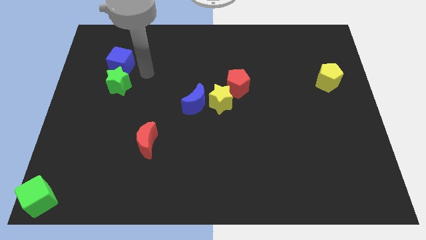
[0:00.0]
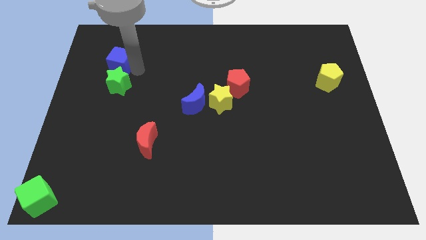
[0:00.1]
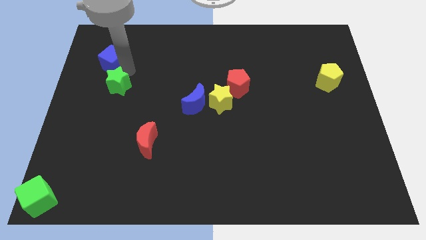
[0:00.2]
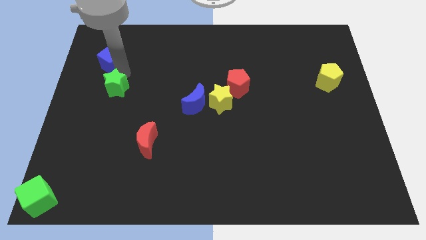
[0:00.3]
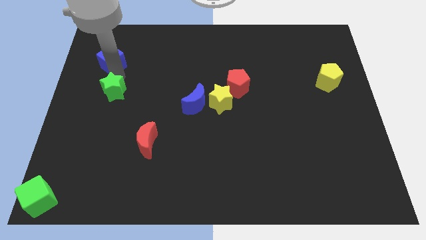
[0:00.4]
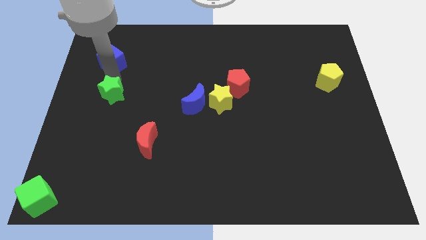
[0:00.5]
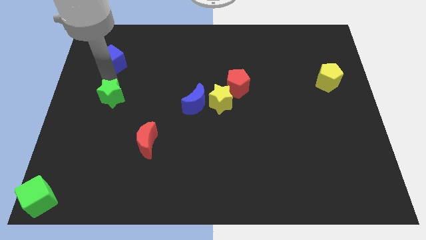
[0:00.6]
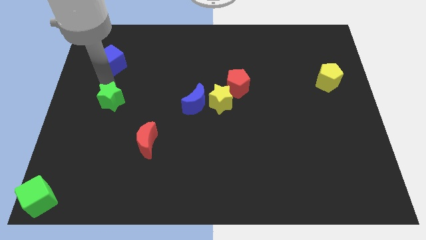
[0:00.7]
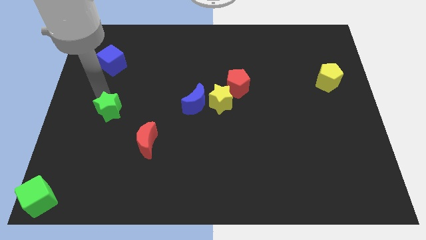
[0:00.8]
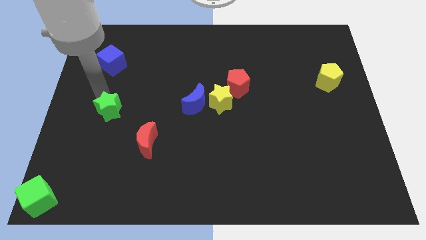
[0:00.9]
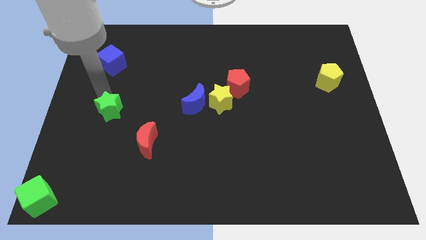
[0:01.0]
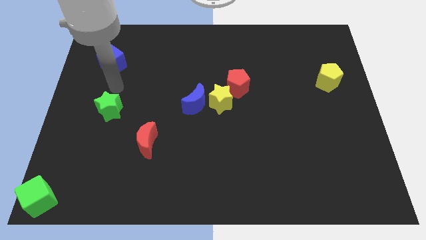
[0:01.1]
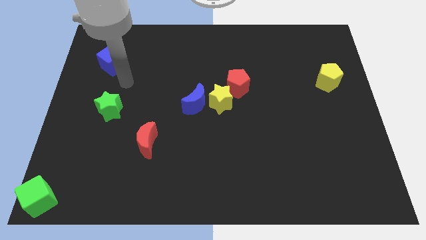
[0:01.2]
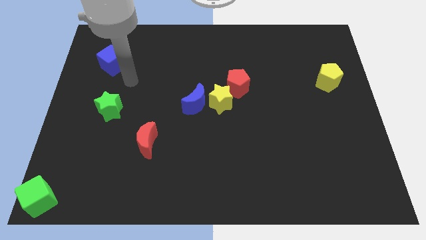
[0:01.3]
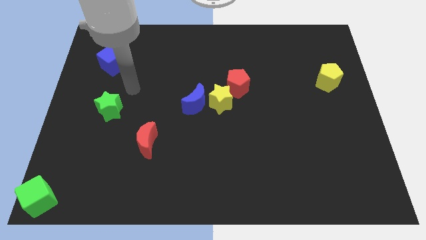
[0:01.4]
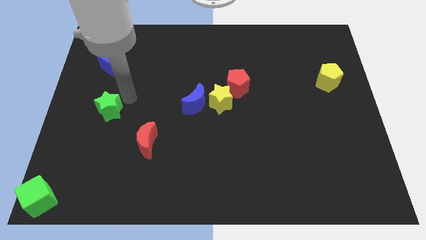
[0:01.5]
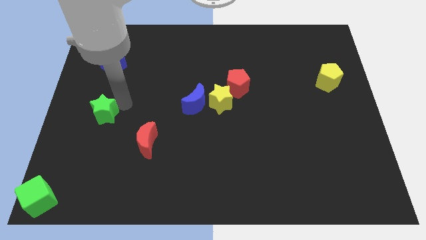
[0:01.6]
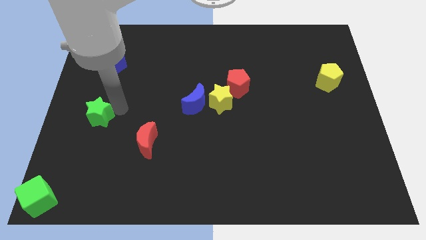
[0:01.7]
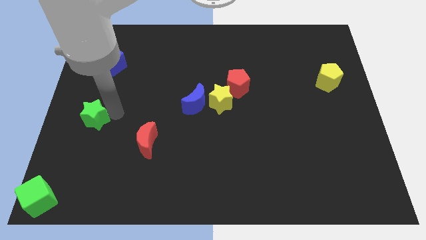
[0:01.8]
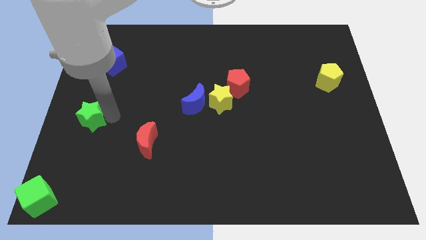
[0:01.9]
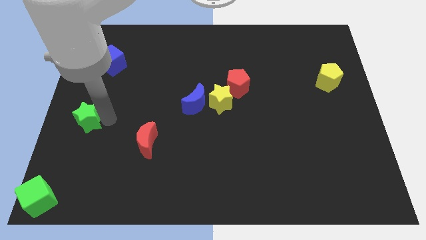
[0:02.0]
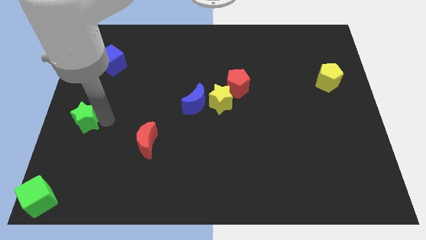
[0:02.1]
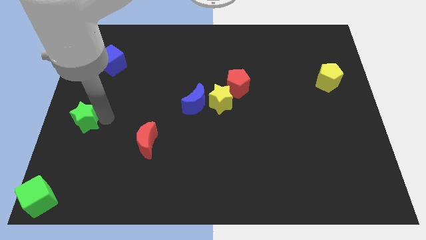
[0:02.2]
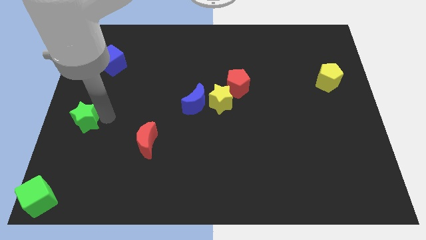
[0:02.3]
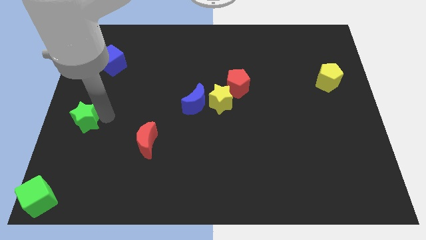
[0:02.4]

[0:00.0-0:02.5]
place the green star to the left of the red moon

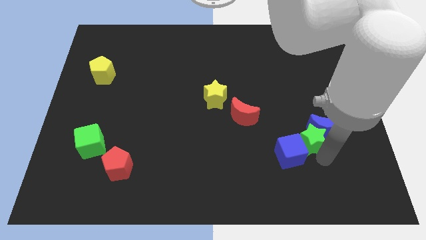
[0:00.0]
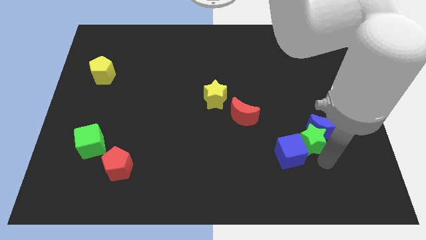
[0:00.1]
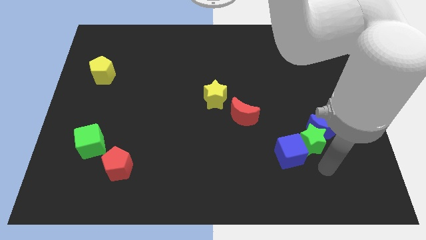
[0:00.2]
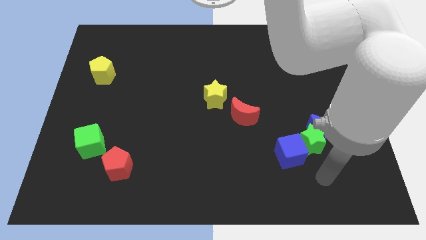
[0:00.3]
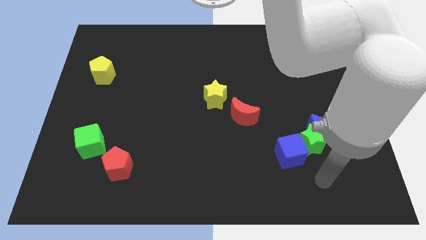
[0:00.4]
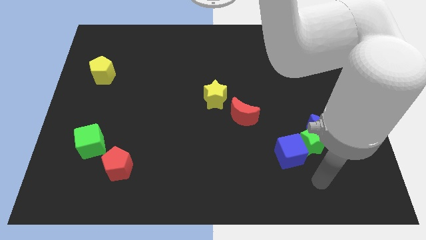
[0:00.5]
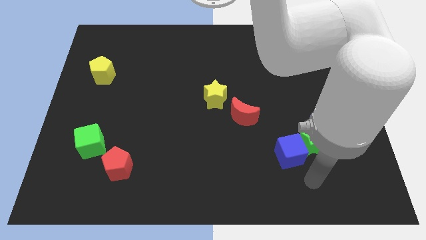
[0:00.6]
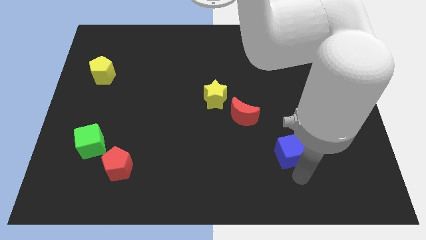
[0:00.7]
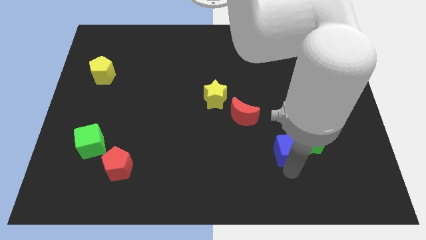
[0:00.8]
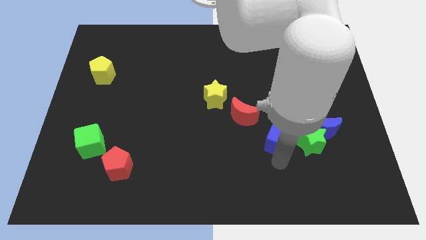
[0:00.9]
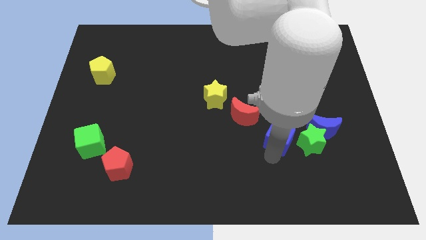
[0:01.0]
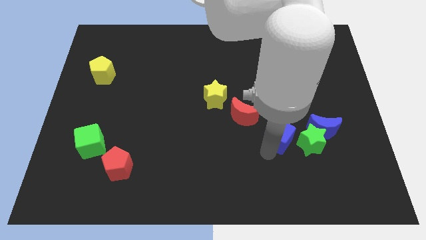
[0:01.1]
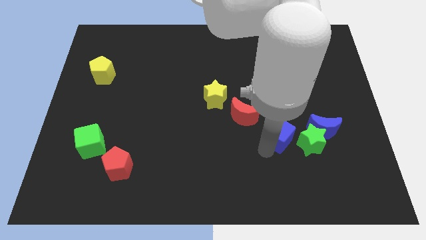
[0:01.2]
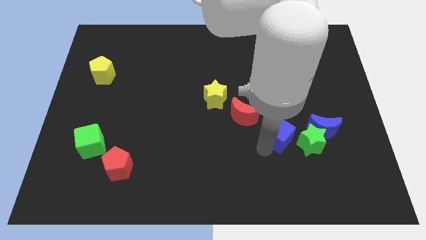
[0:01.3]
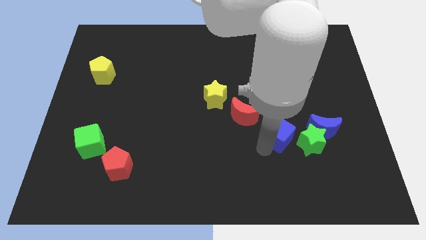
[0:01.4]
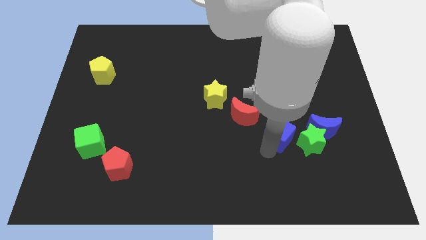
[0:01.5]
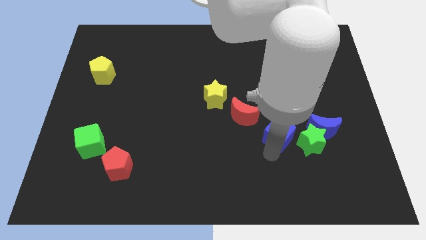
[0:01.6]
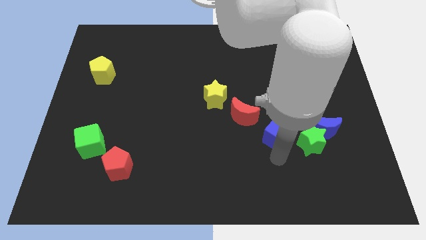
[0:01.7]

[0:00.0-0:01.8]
place the blue cube at the top left side of green star

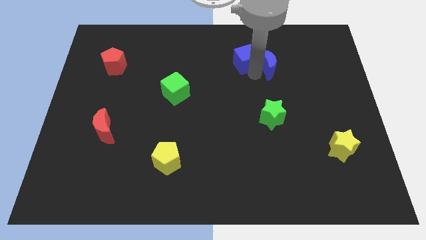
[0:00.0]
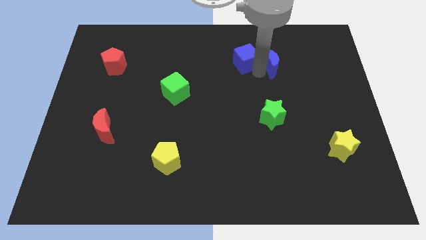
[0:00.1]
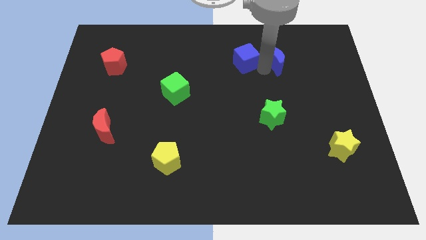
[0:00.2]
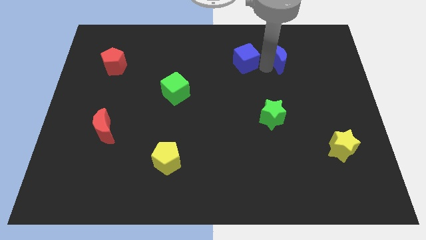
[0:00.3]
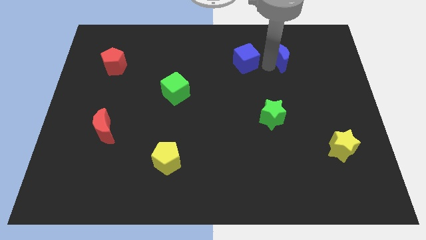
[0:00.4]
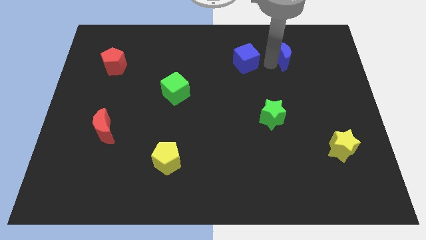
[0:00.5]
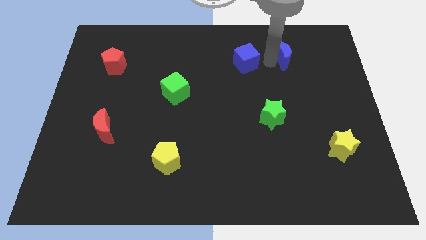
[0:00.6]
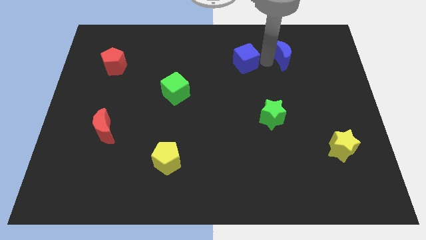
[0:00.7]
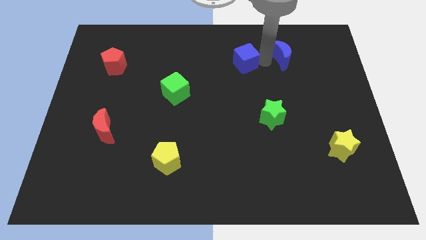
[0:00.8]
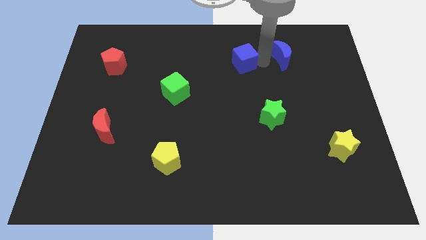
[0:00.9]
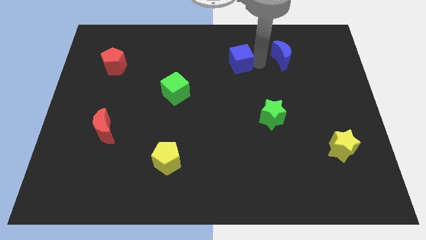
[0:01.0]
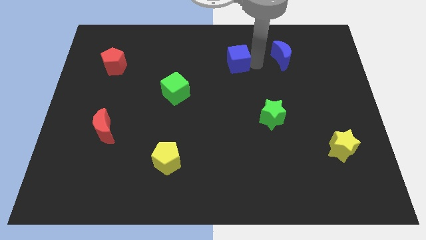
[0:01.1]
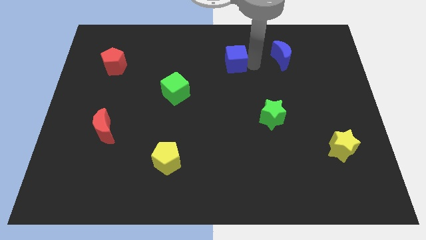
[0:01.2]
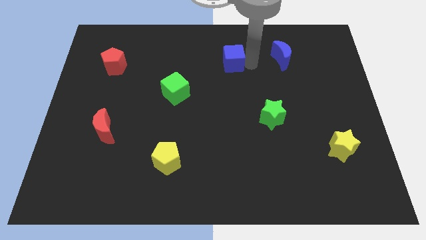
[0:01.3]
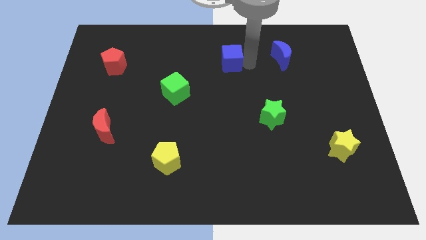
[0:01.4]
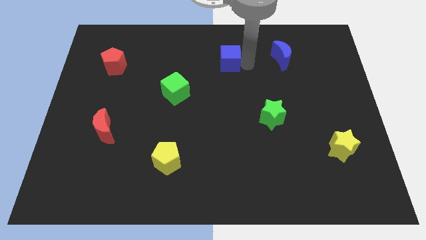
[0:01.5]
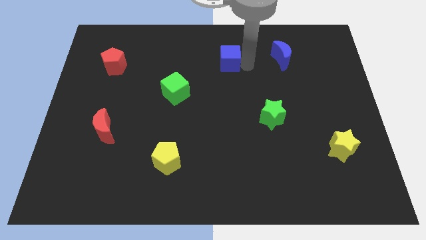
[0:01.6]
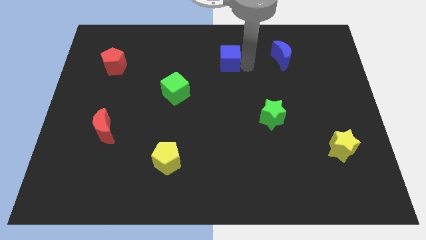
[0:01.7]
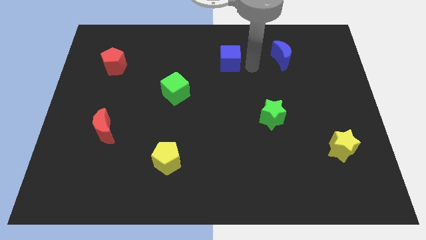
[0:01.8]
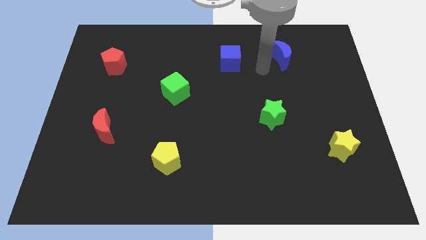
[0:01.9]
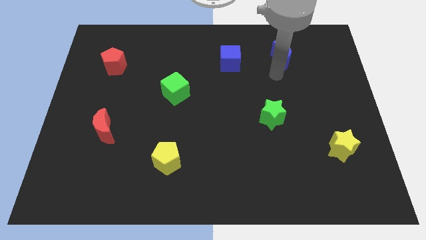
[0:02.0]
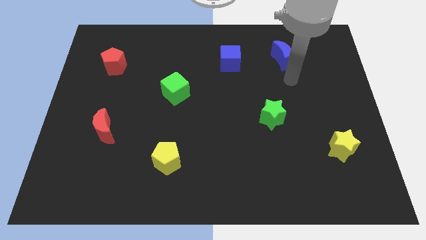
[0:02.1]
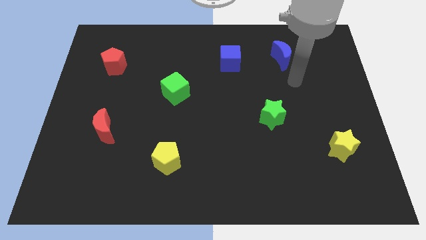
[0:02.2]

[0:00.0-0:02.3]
place the blue cube to the left of the blue moon

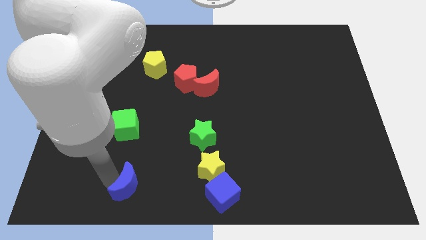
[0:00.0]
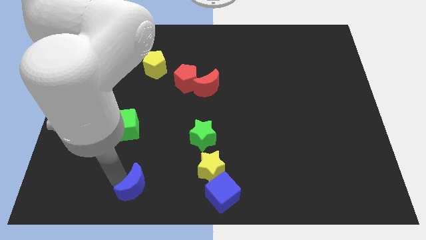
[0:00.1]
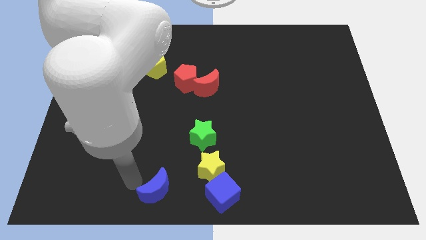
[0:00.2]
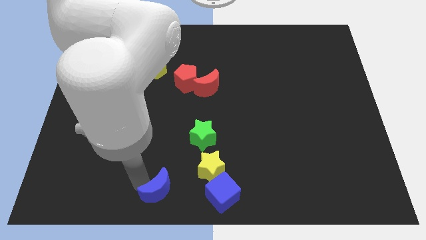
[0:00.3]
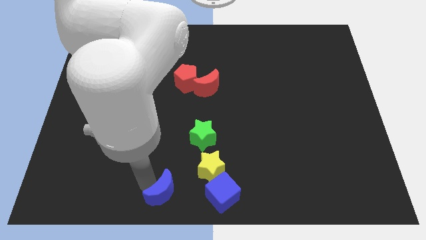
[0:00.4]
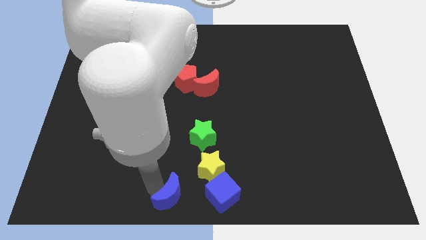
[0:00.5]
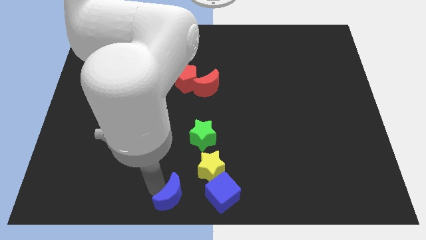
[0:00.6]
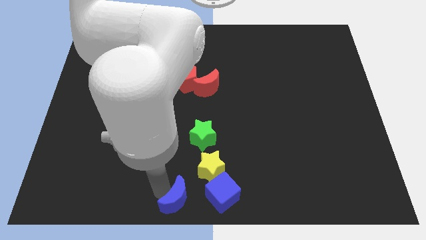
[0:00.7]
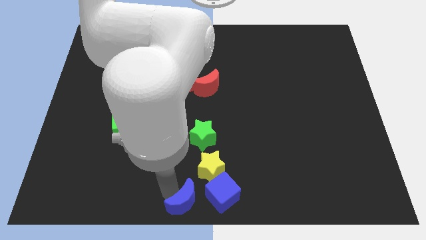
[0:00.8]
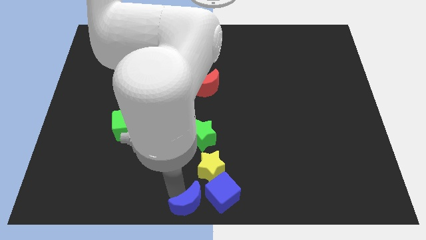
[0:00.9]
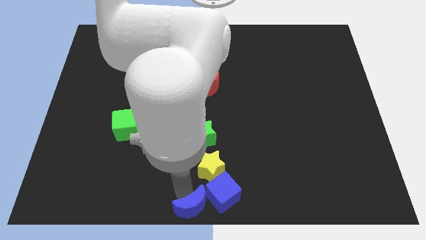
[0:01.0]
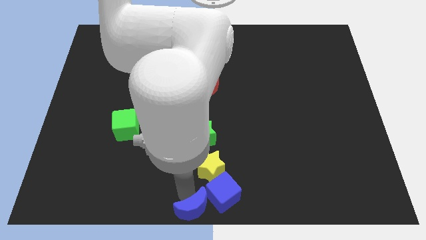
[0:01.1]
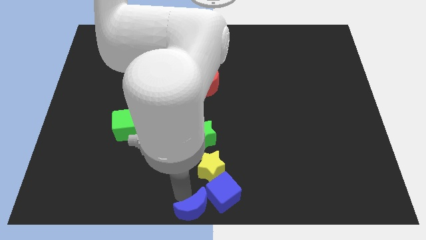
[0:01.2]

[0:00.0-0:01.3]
push blue moon into the blue cube

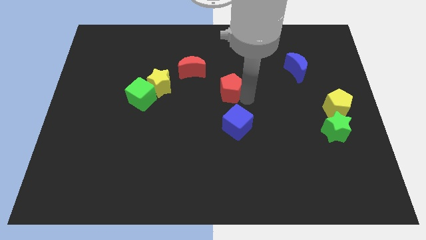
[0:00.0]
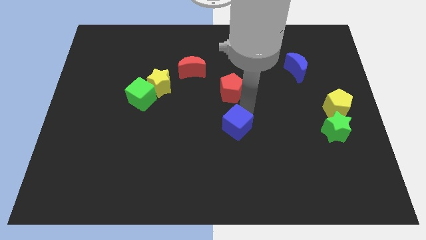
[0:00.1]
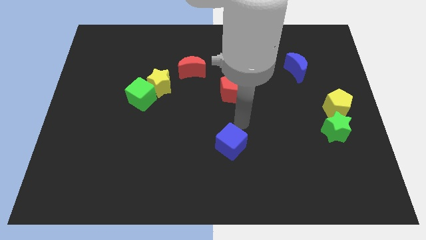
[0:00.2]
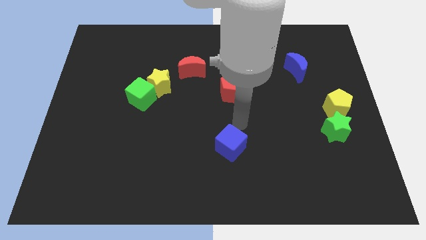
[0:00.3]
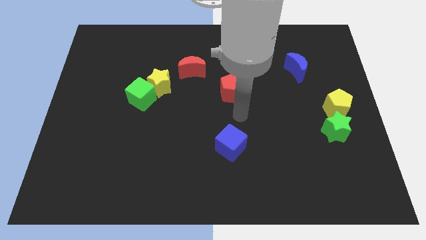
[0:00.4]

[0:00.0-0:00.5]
push the blue cube slightly down

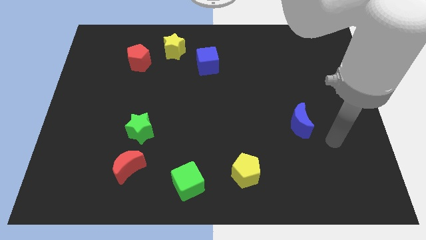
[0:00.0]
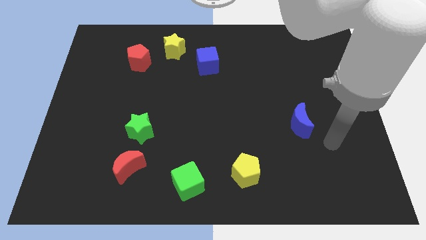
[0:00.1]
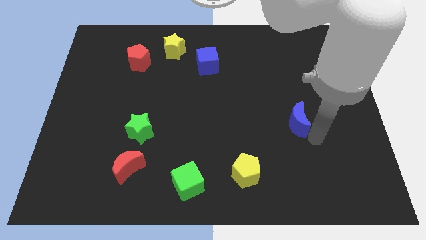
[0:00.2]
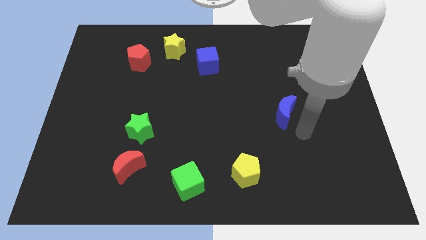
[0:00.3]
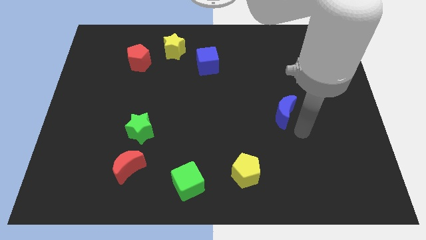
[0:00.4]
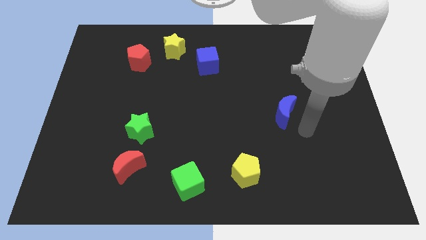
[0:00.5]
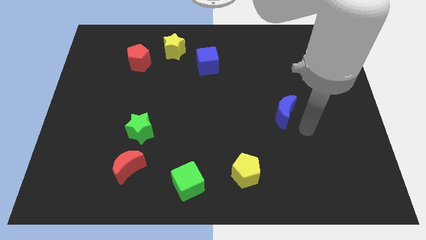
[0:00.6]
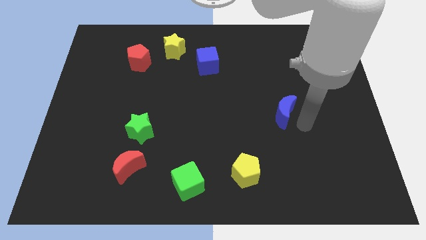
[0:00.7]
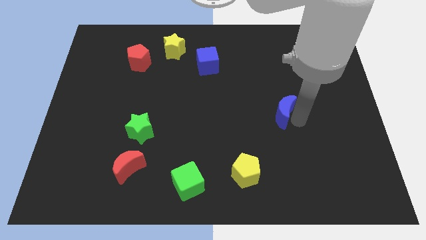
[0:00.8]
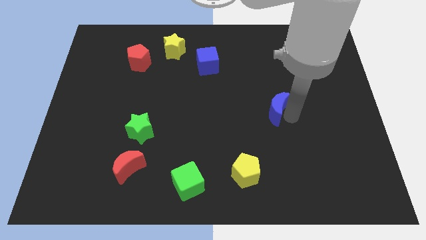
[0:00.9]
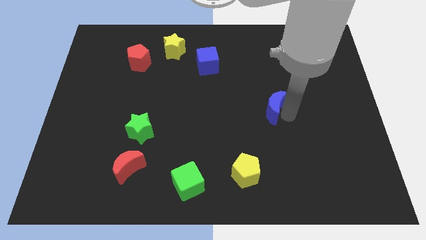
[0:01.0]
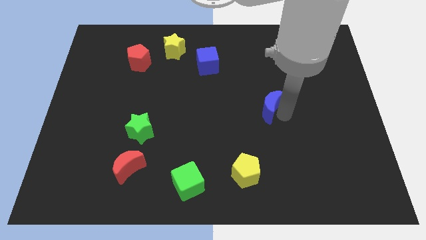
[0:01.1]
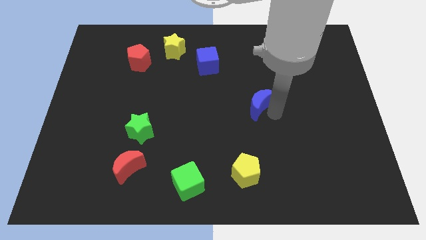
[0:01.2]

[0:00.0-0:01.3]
place the blue moon diagonally to blue cube
